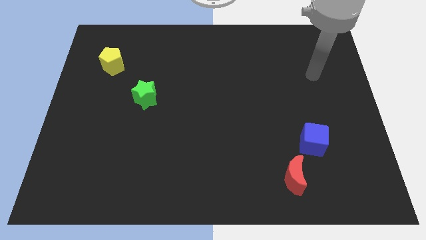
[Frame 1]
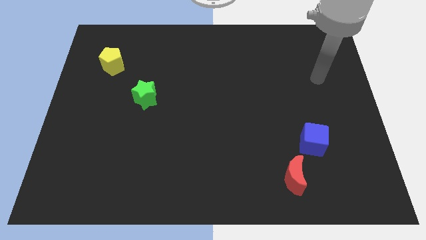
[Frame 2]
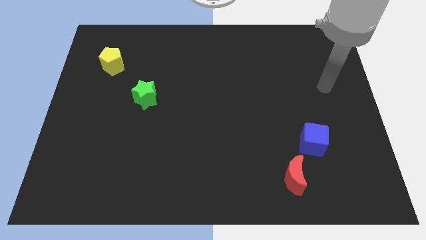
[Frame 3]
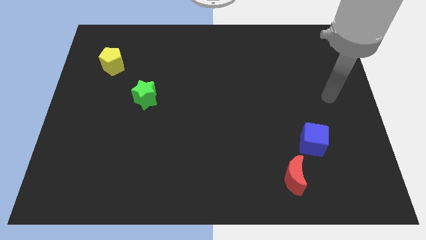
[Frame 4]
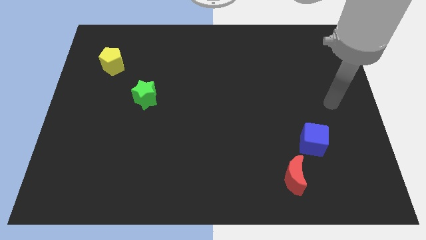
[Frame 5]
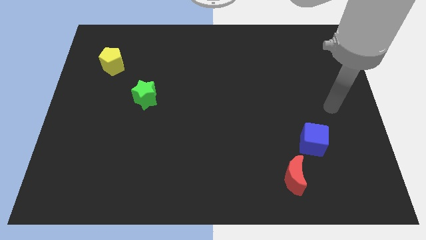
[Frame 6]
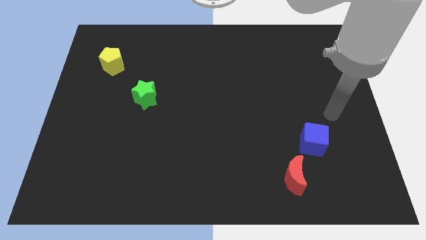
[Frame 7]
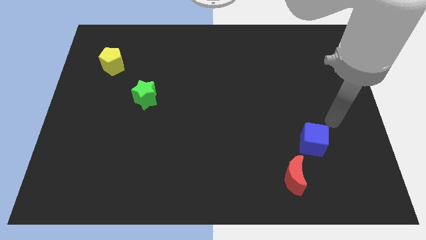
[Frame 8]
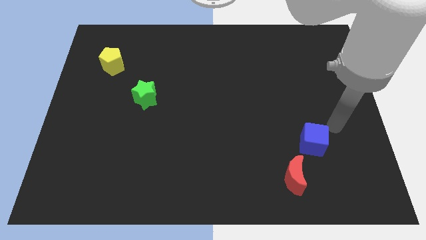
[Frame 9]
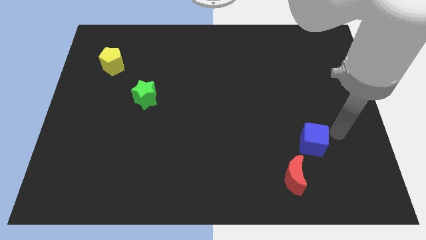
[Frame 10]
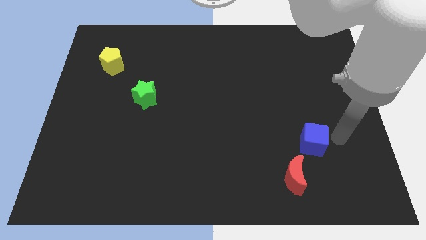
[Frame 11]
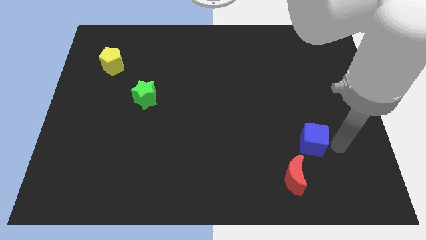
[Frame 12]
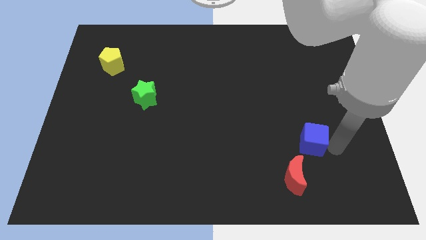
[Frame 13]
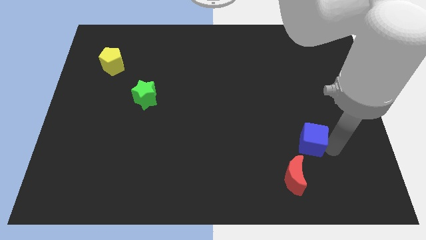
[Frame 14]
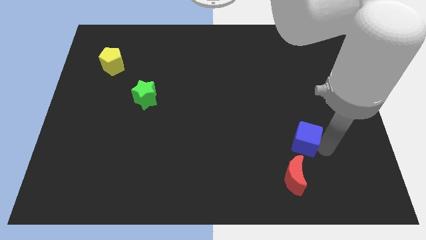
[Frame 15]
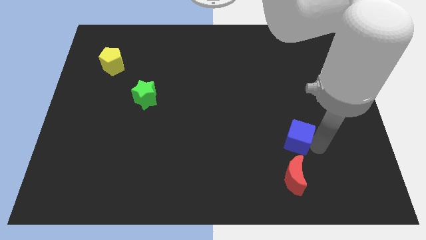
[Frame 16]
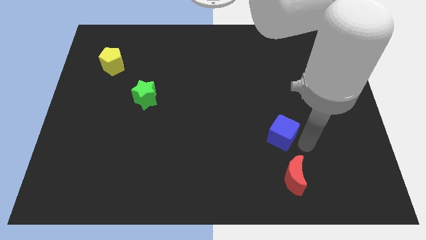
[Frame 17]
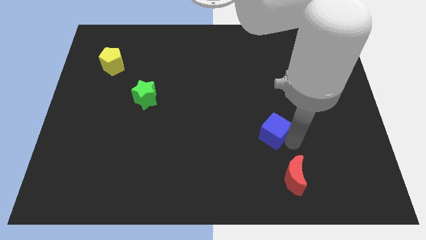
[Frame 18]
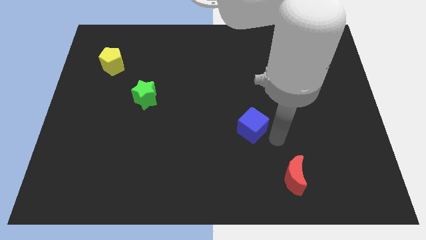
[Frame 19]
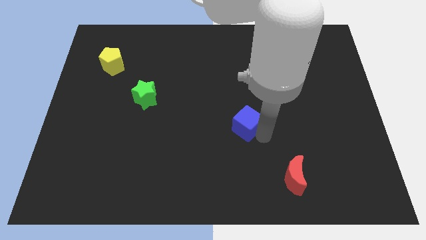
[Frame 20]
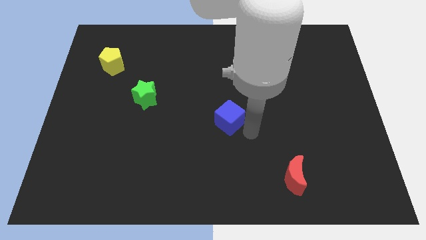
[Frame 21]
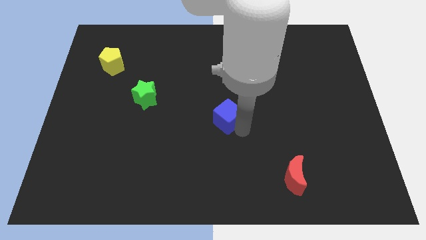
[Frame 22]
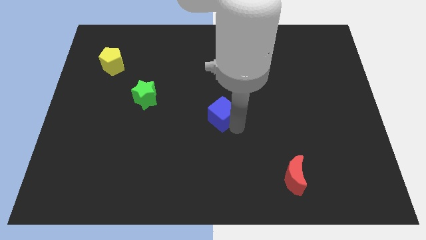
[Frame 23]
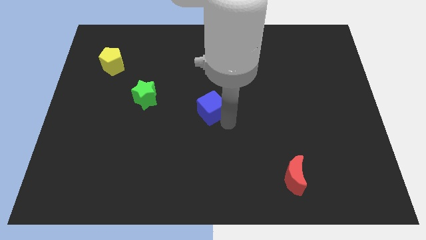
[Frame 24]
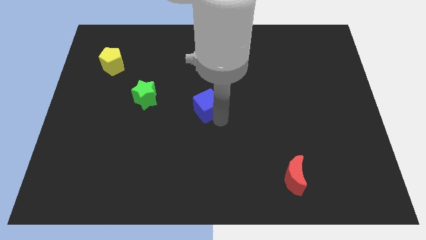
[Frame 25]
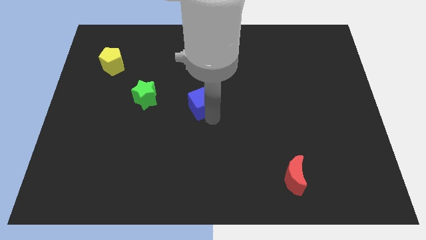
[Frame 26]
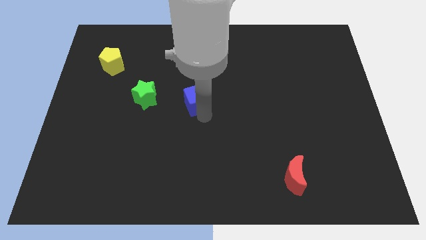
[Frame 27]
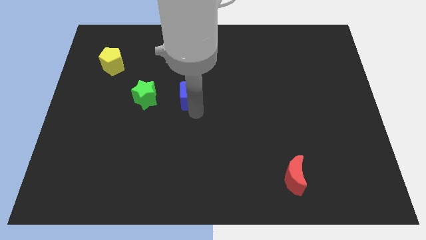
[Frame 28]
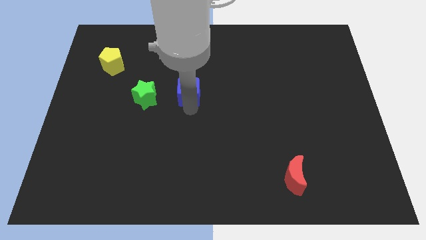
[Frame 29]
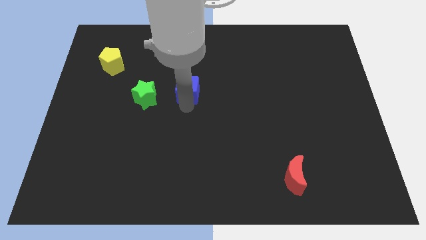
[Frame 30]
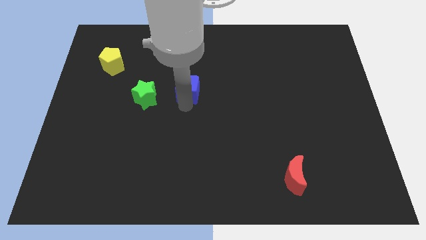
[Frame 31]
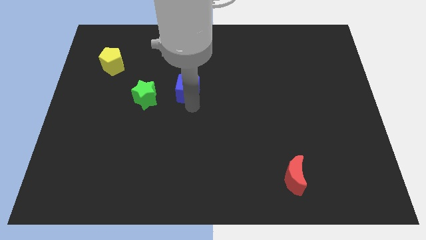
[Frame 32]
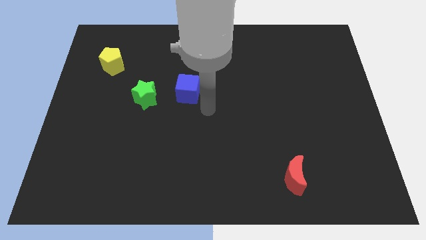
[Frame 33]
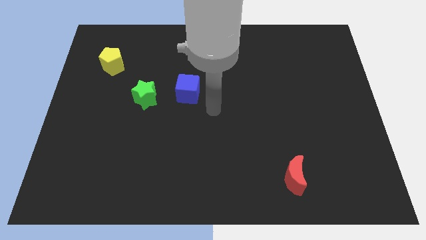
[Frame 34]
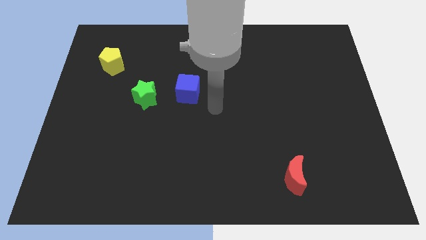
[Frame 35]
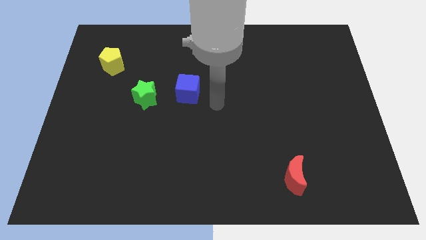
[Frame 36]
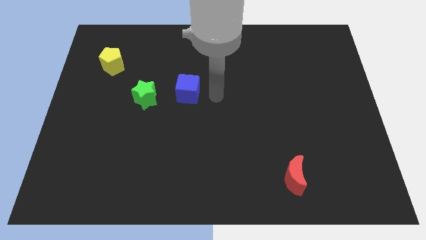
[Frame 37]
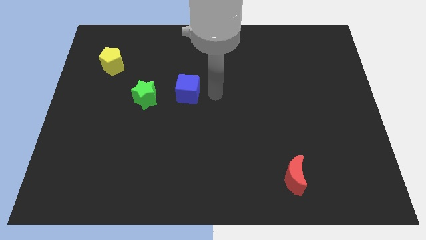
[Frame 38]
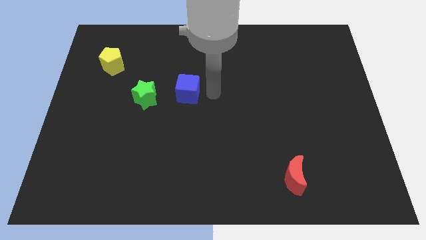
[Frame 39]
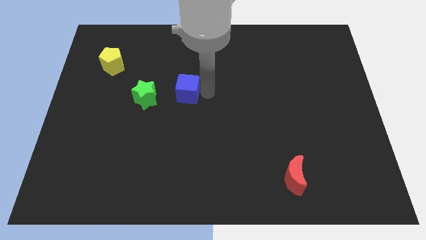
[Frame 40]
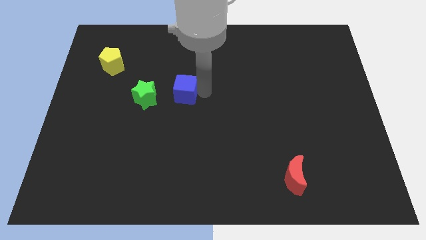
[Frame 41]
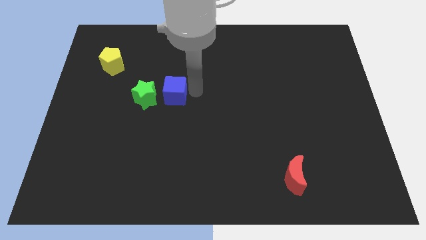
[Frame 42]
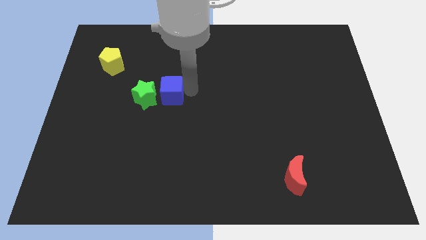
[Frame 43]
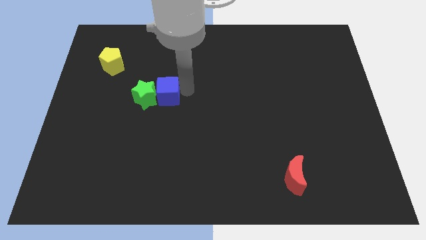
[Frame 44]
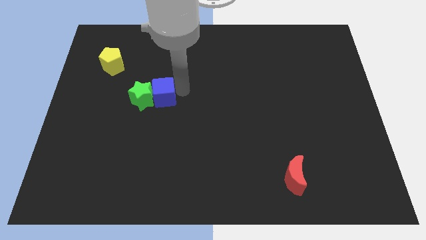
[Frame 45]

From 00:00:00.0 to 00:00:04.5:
slide the cube to the star

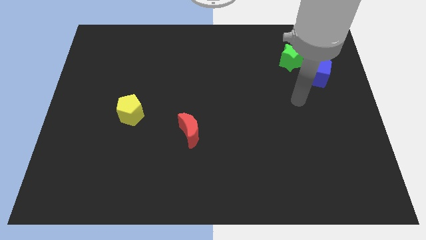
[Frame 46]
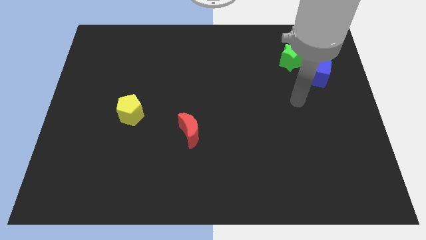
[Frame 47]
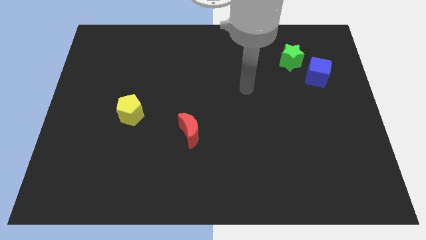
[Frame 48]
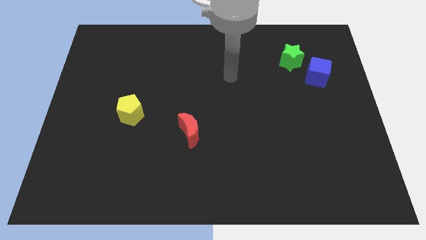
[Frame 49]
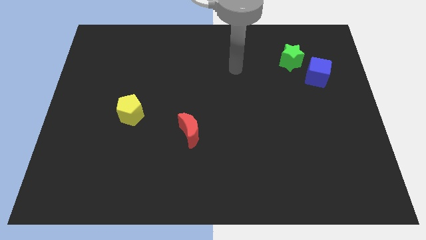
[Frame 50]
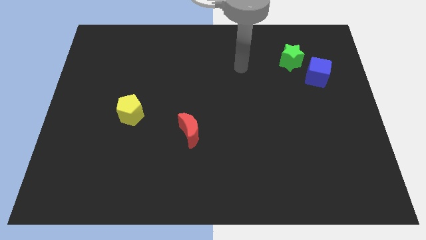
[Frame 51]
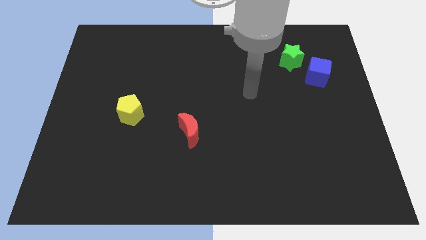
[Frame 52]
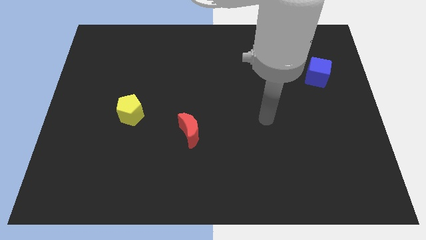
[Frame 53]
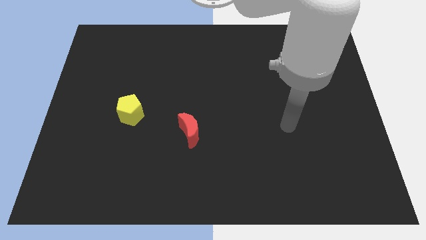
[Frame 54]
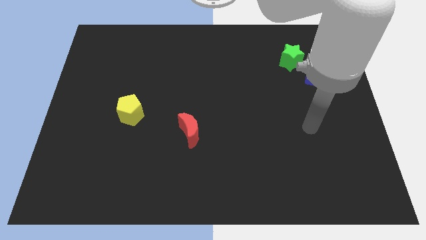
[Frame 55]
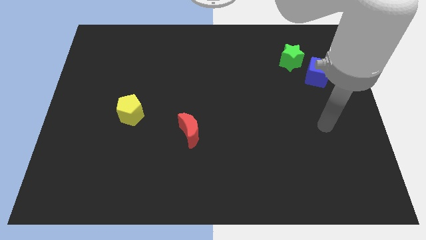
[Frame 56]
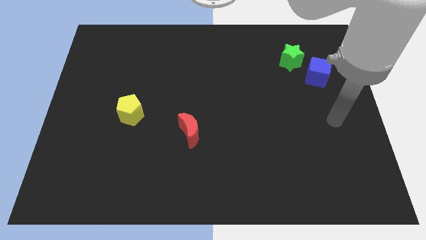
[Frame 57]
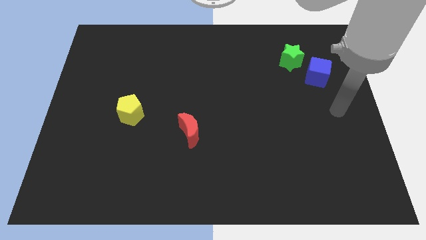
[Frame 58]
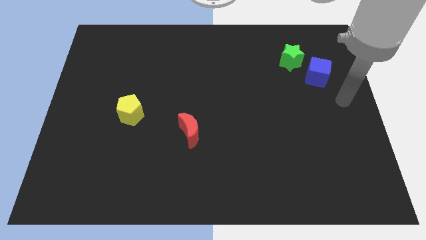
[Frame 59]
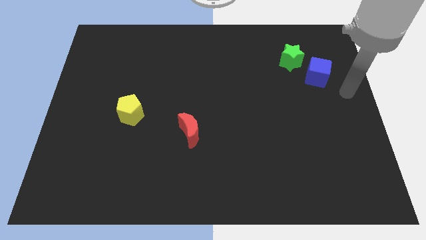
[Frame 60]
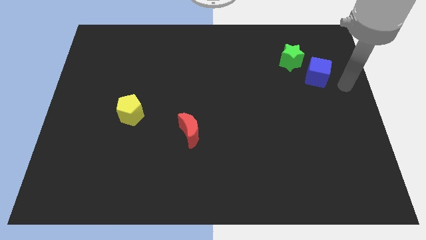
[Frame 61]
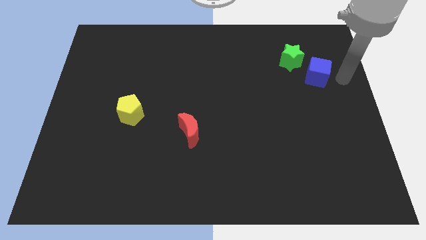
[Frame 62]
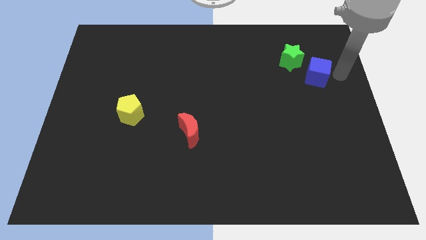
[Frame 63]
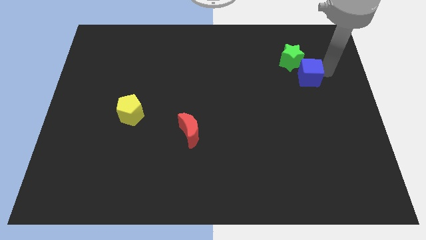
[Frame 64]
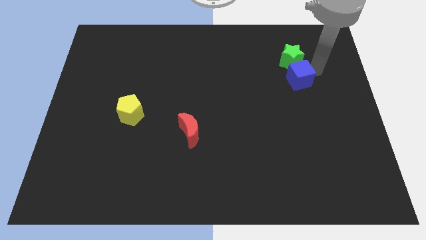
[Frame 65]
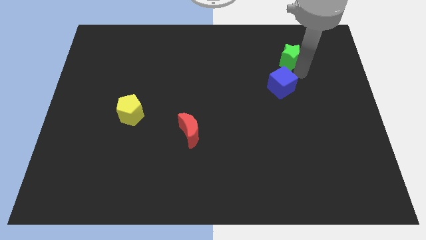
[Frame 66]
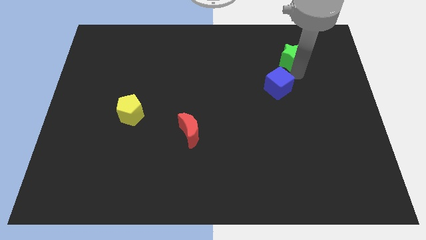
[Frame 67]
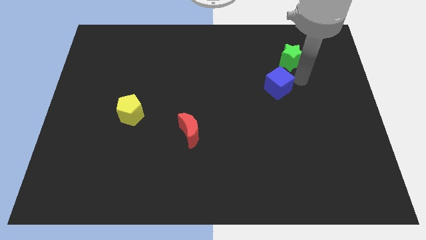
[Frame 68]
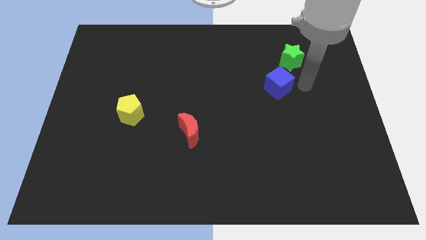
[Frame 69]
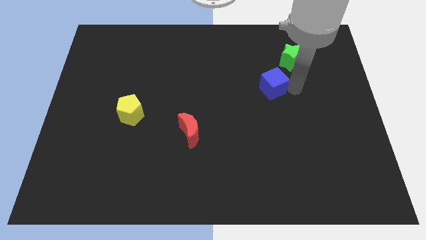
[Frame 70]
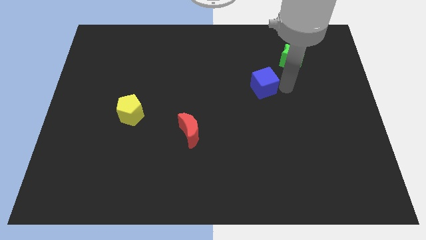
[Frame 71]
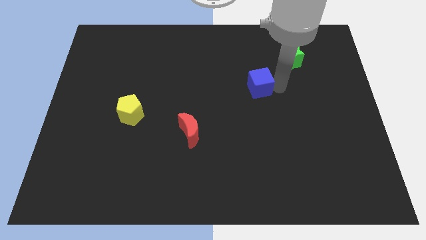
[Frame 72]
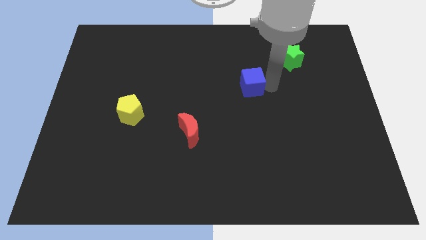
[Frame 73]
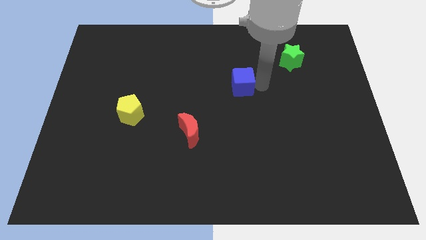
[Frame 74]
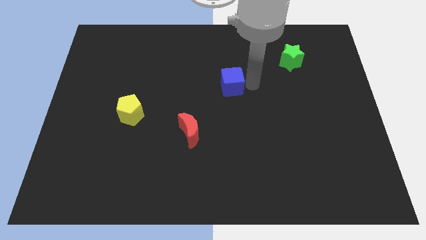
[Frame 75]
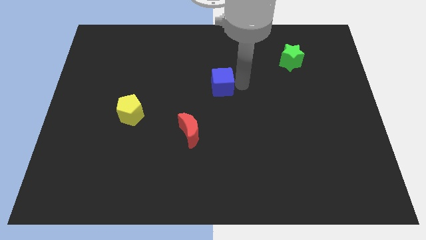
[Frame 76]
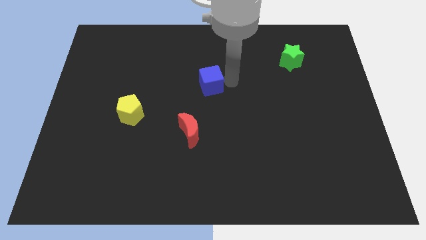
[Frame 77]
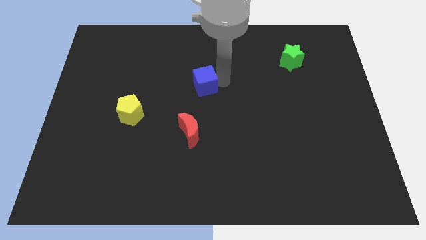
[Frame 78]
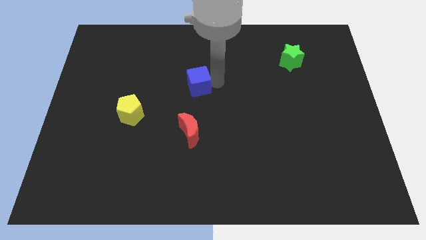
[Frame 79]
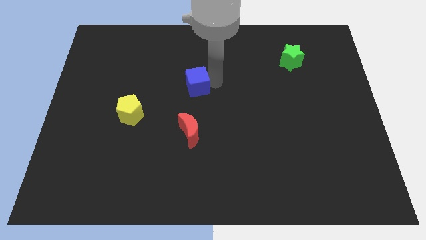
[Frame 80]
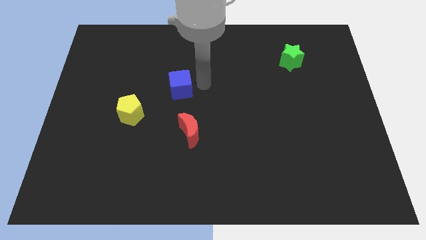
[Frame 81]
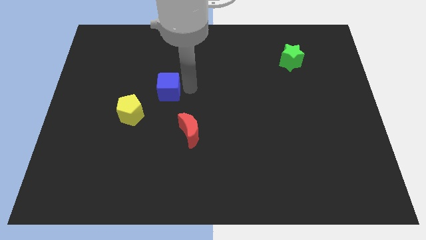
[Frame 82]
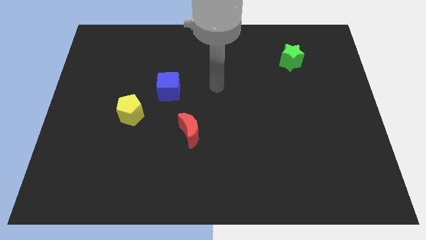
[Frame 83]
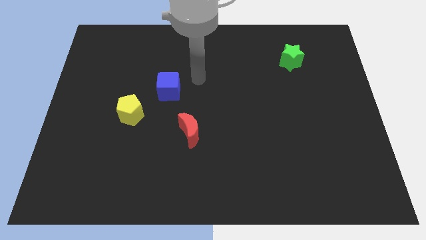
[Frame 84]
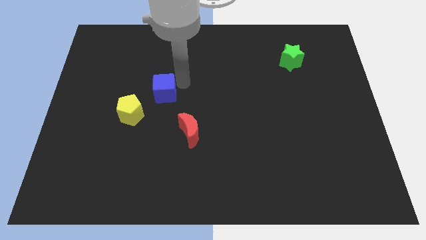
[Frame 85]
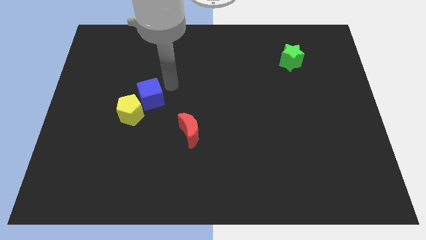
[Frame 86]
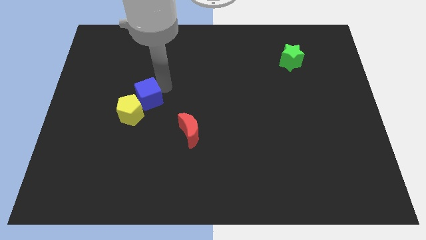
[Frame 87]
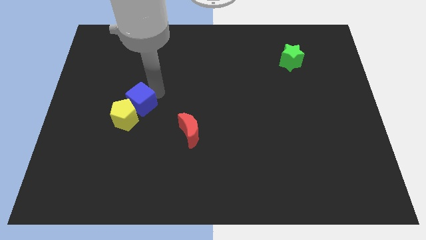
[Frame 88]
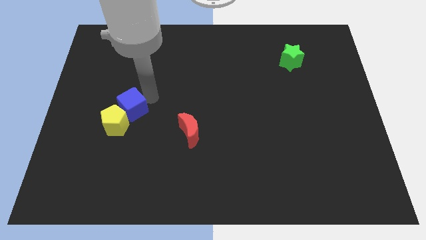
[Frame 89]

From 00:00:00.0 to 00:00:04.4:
put the blue block to the pentagon
